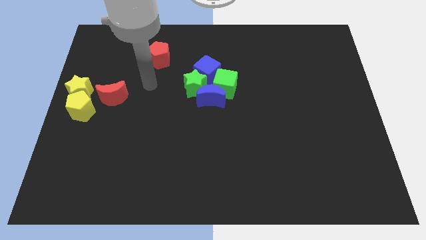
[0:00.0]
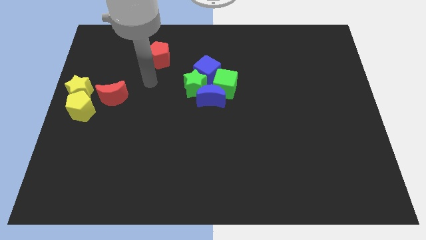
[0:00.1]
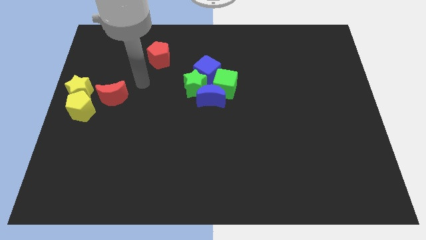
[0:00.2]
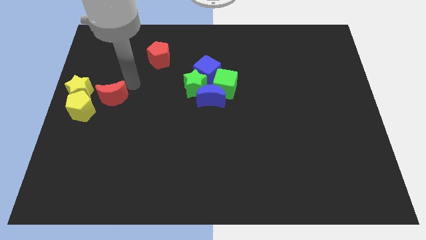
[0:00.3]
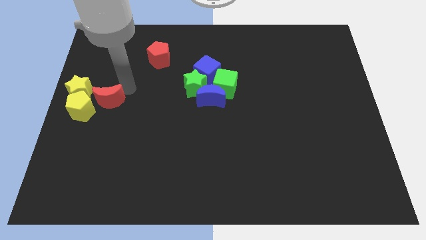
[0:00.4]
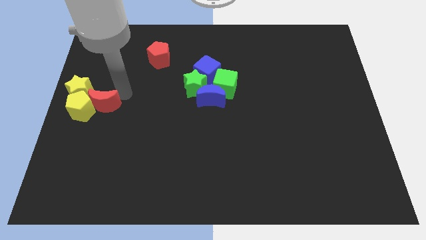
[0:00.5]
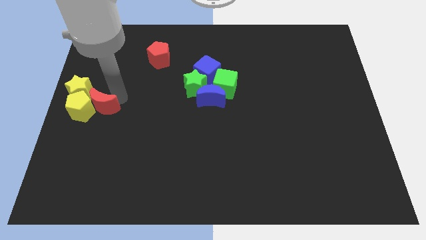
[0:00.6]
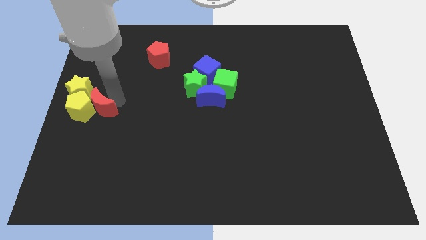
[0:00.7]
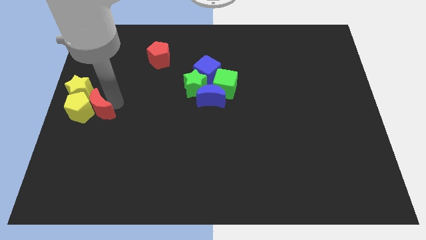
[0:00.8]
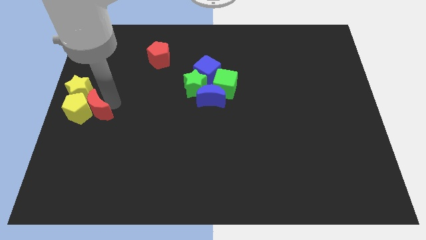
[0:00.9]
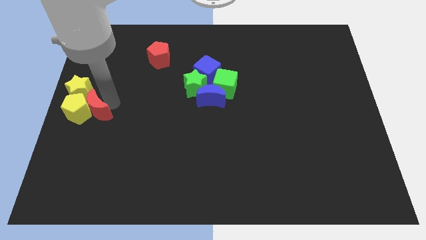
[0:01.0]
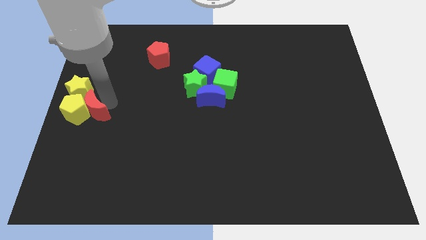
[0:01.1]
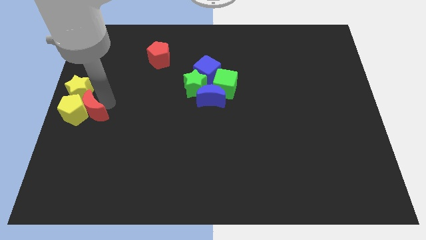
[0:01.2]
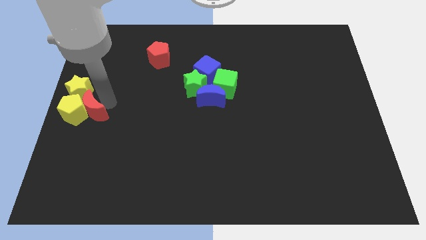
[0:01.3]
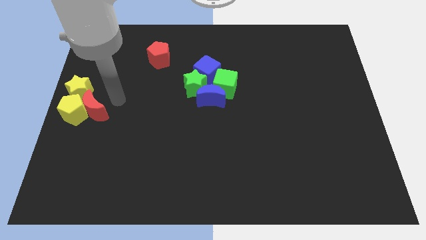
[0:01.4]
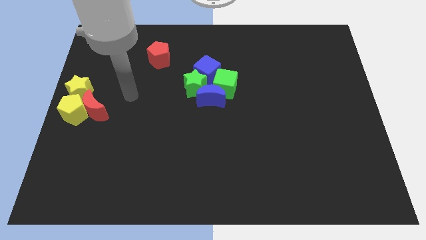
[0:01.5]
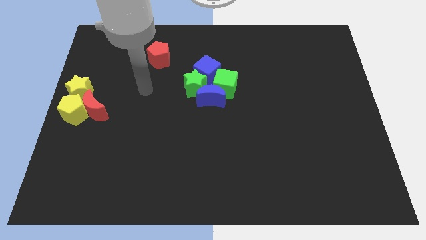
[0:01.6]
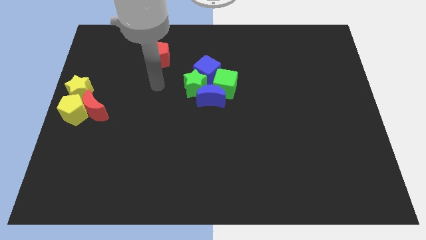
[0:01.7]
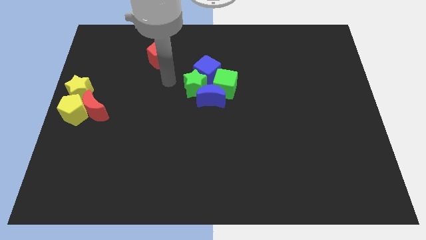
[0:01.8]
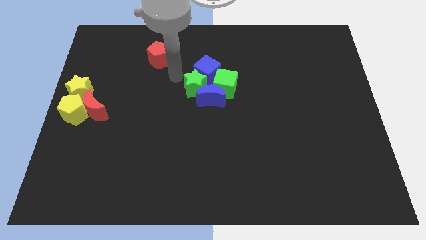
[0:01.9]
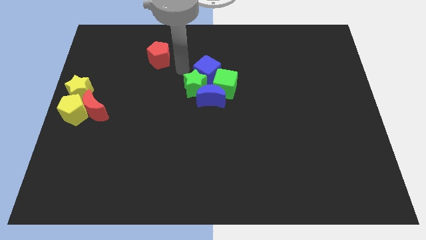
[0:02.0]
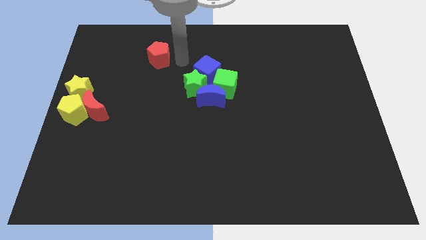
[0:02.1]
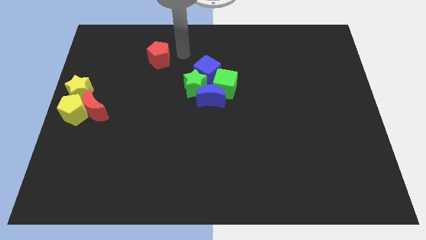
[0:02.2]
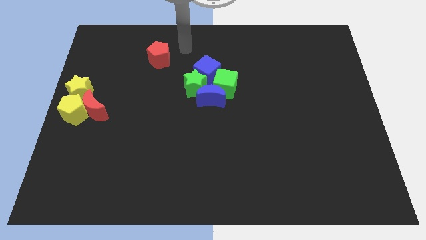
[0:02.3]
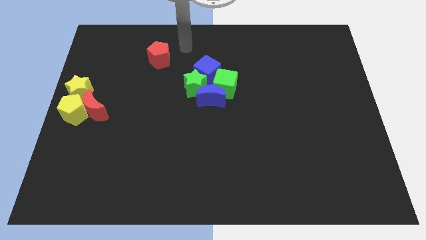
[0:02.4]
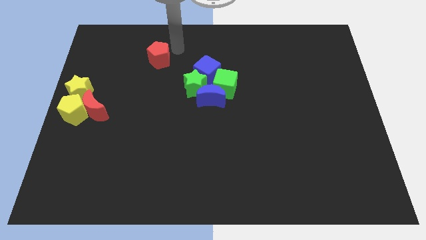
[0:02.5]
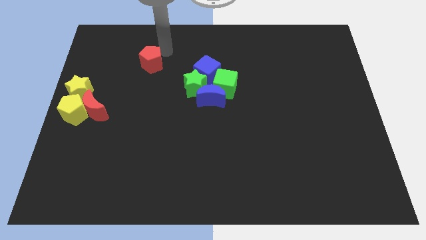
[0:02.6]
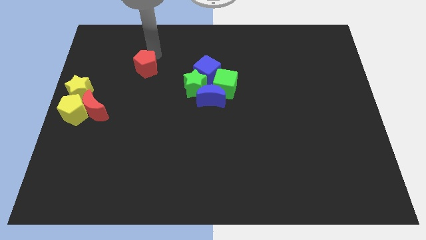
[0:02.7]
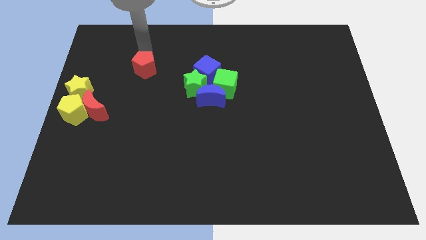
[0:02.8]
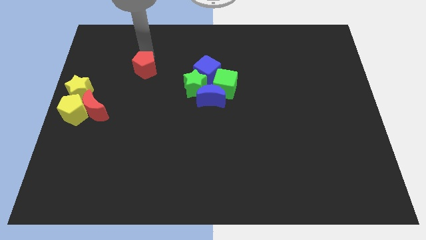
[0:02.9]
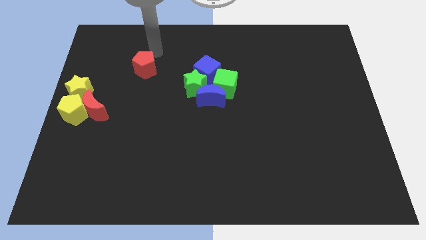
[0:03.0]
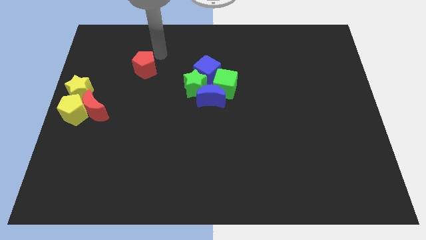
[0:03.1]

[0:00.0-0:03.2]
place the arm above the red pentagon

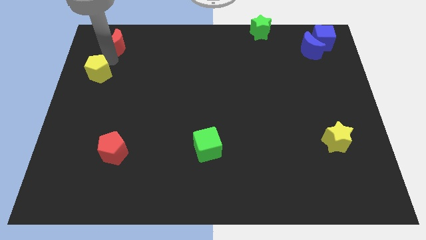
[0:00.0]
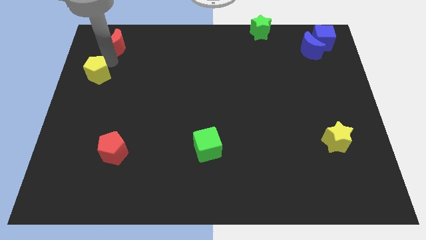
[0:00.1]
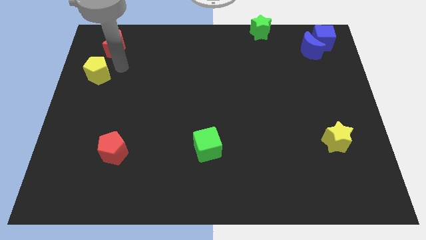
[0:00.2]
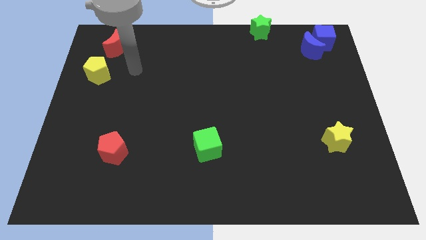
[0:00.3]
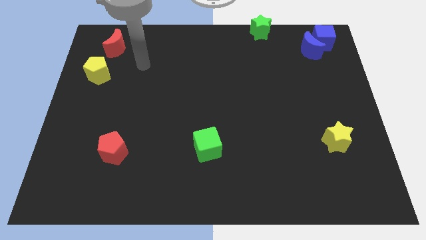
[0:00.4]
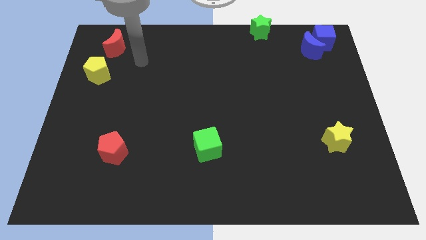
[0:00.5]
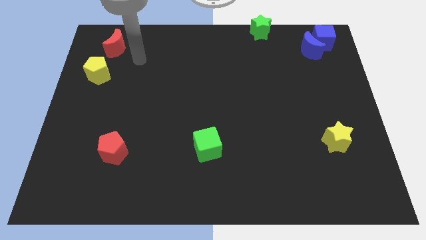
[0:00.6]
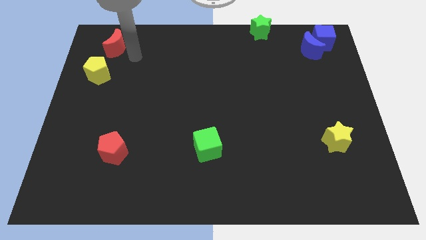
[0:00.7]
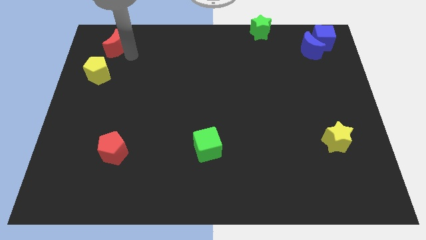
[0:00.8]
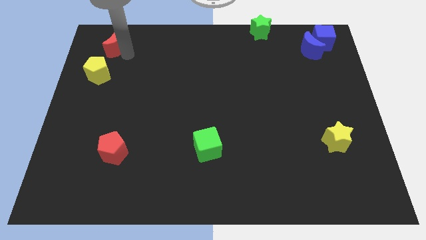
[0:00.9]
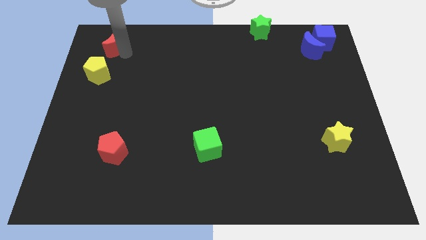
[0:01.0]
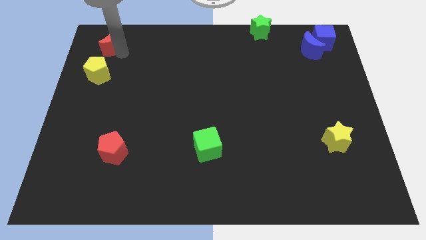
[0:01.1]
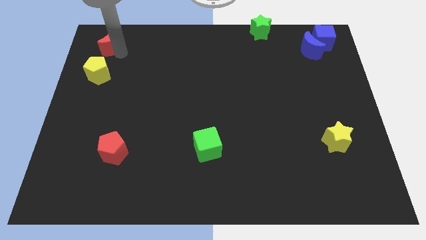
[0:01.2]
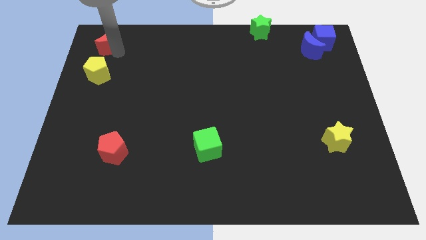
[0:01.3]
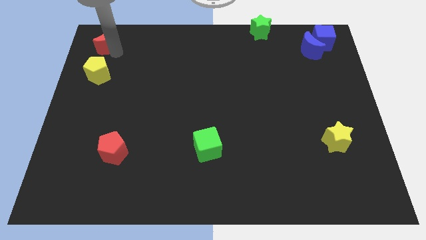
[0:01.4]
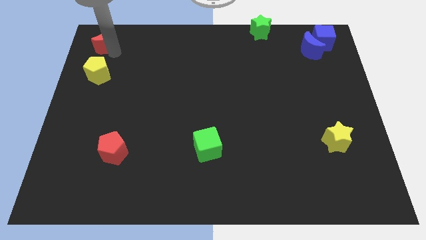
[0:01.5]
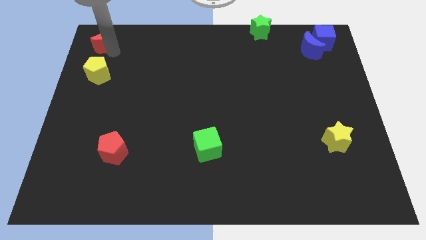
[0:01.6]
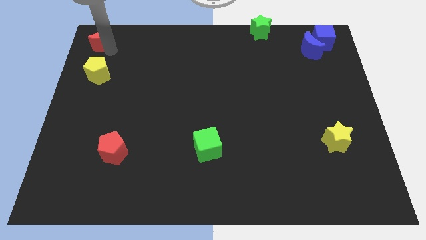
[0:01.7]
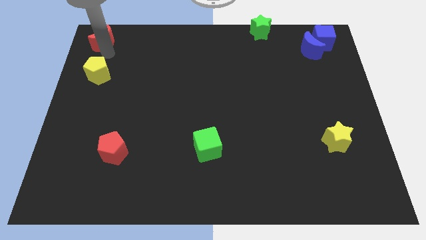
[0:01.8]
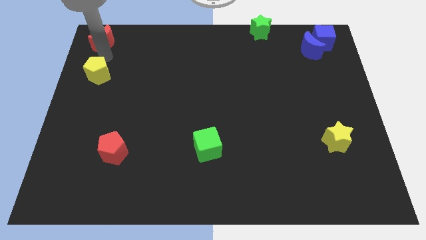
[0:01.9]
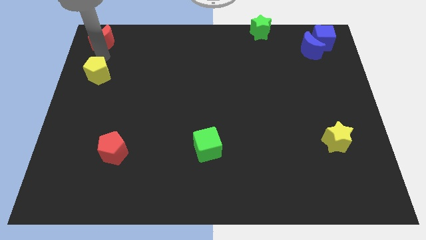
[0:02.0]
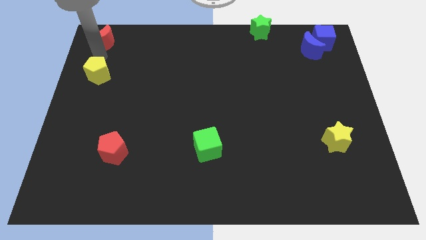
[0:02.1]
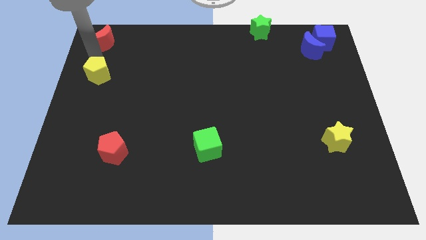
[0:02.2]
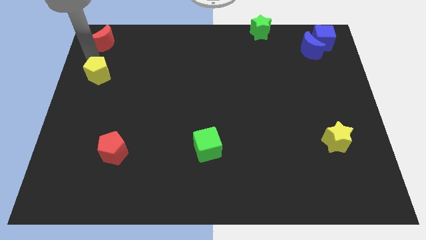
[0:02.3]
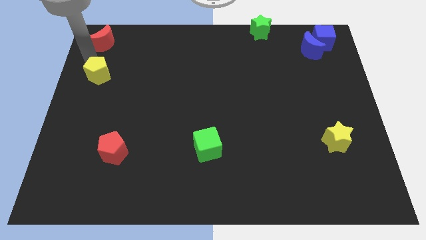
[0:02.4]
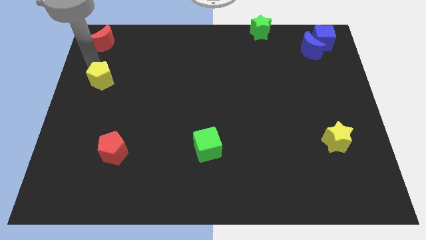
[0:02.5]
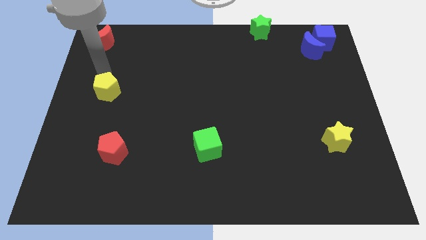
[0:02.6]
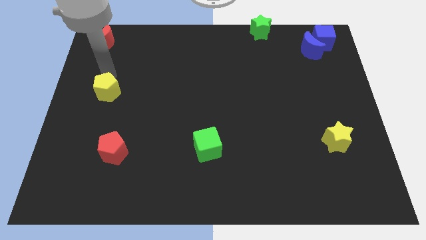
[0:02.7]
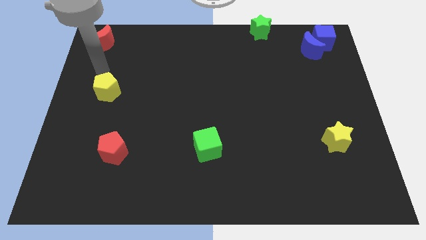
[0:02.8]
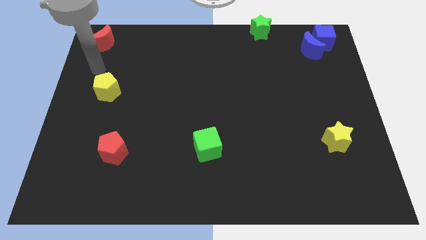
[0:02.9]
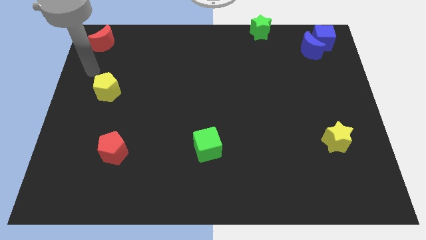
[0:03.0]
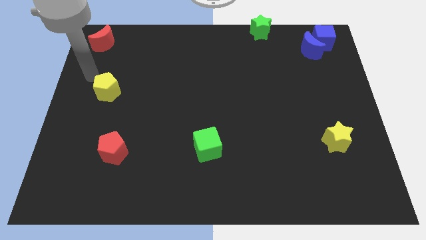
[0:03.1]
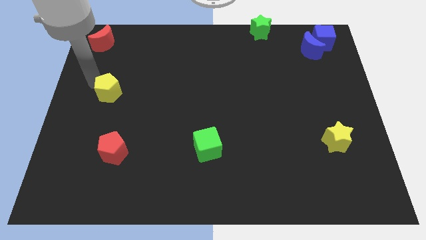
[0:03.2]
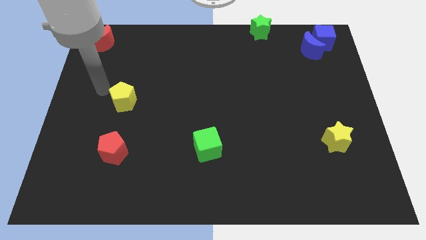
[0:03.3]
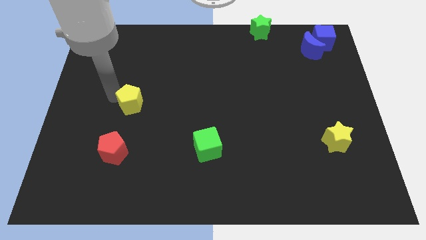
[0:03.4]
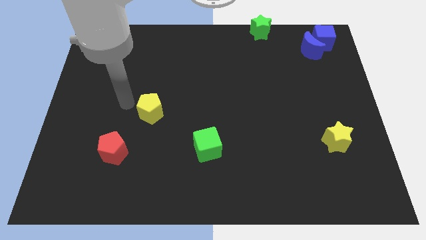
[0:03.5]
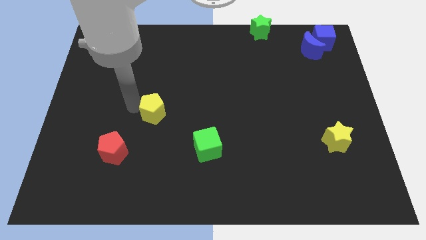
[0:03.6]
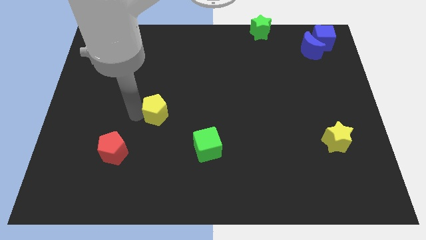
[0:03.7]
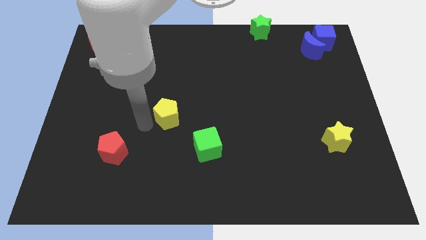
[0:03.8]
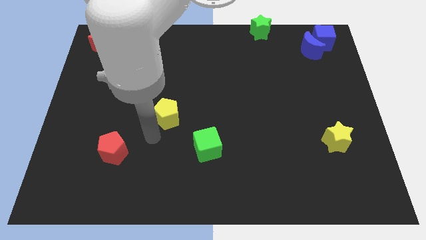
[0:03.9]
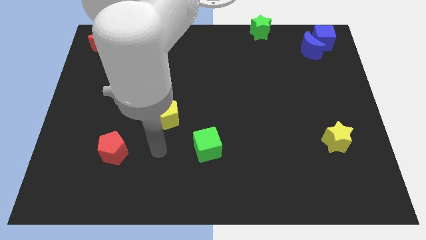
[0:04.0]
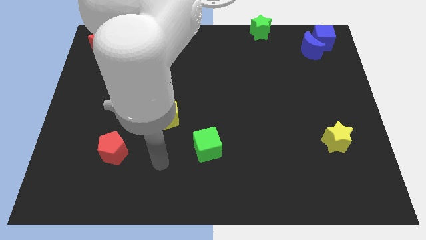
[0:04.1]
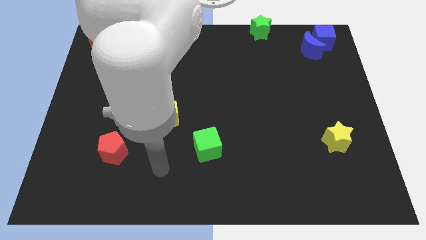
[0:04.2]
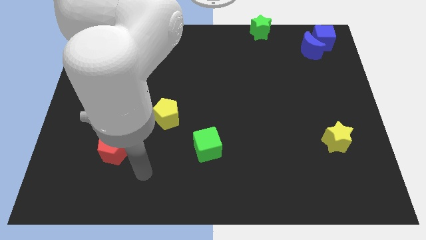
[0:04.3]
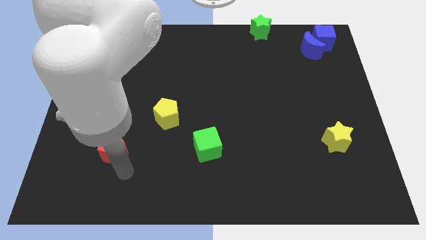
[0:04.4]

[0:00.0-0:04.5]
place the yellow pentagon above the red pentagon and green cube to form a triangle

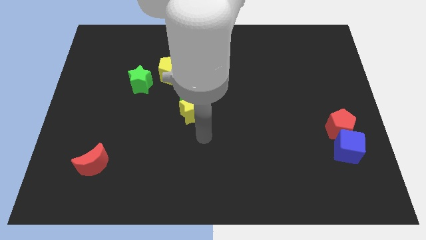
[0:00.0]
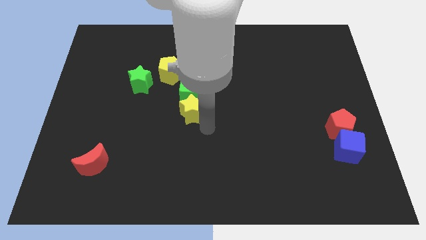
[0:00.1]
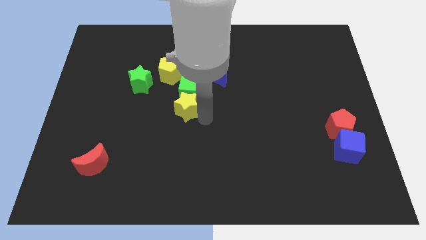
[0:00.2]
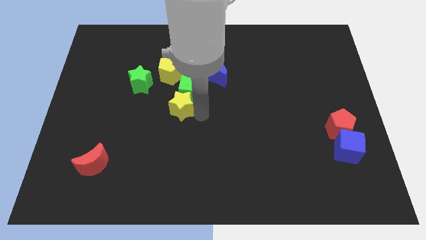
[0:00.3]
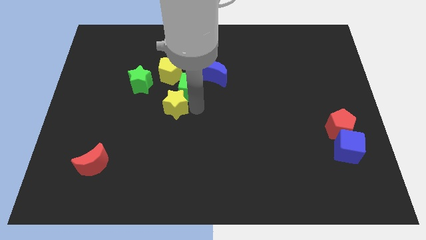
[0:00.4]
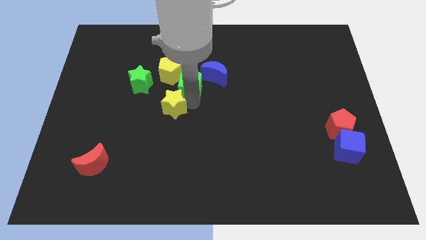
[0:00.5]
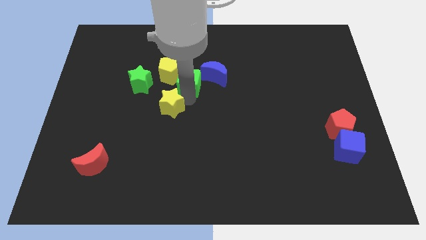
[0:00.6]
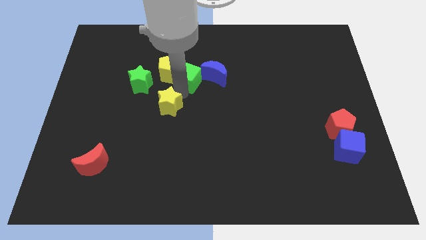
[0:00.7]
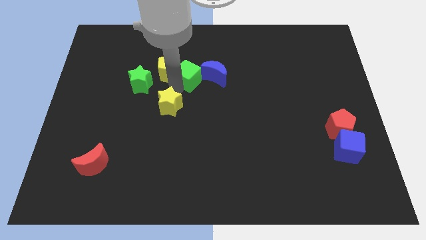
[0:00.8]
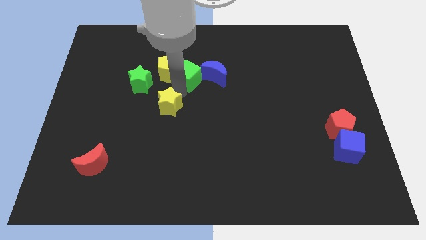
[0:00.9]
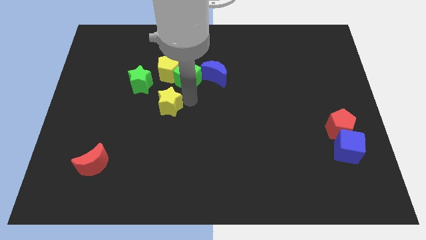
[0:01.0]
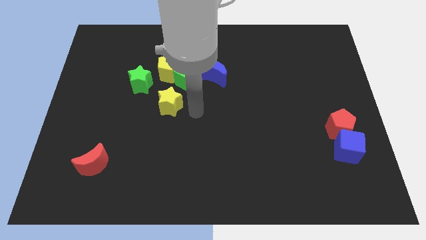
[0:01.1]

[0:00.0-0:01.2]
push the green cube into the yellow pentagon
